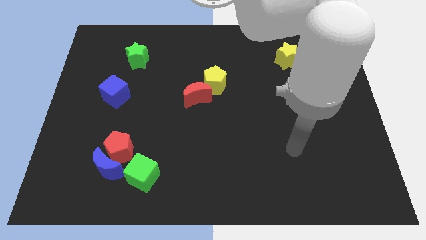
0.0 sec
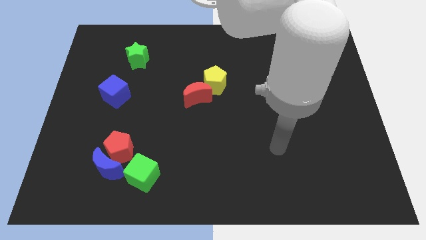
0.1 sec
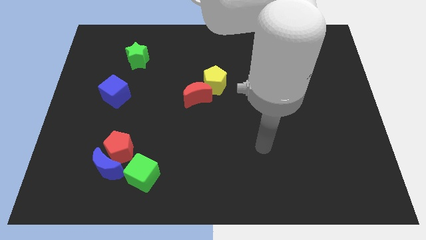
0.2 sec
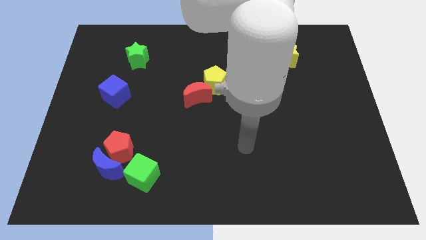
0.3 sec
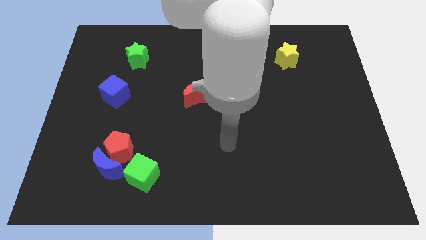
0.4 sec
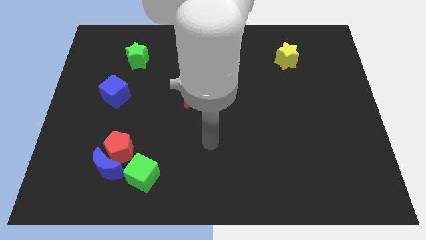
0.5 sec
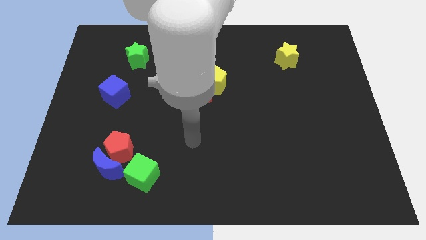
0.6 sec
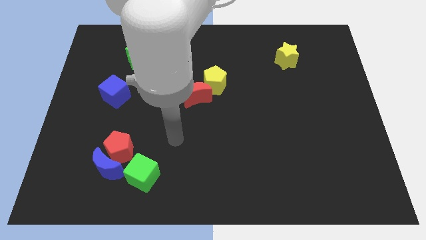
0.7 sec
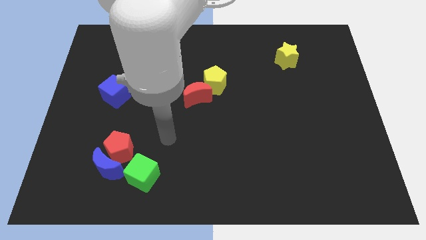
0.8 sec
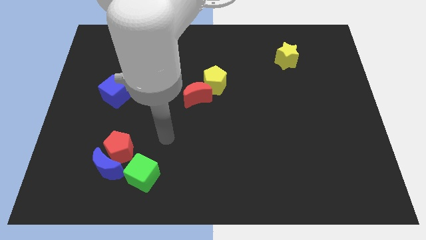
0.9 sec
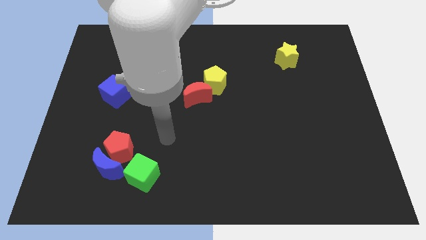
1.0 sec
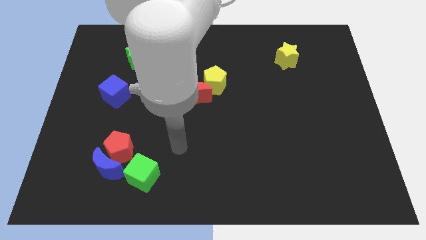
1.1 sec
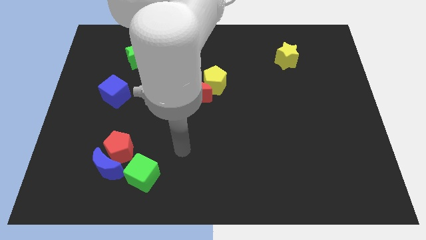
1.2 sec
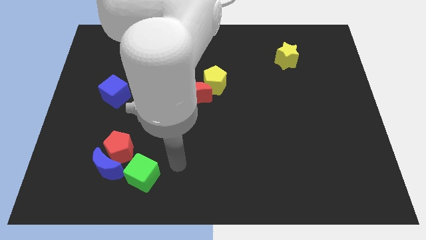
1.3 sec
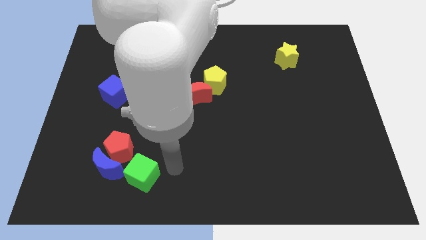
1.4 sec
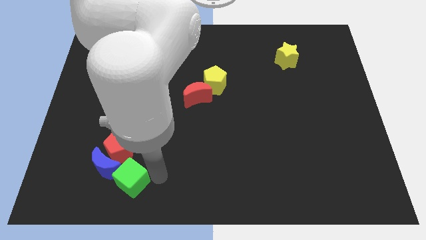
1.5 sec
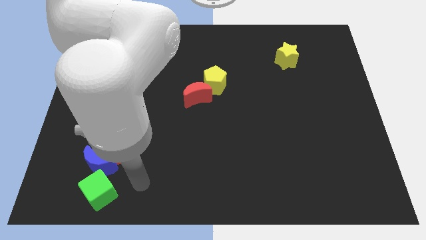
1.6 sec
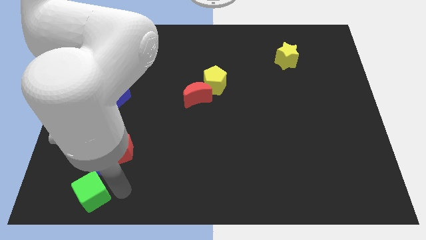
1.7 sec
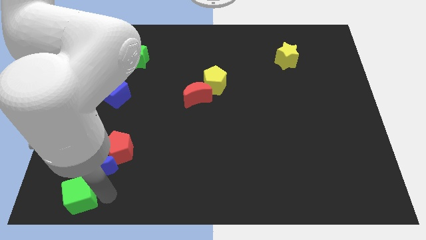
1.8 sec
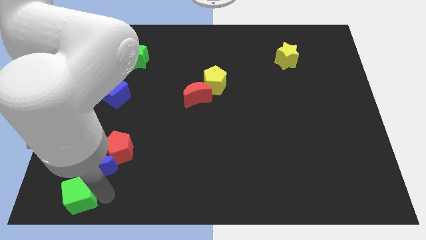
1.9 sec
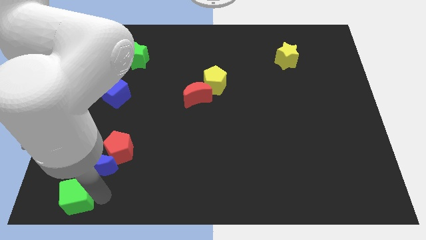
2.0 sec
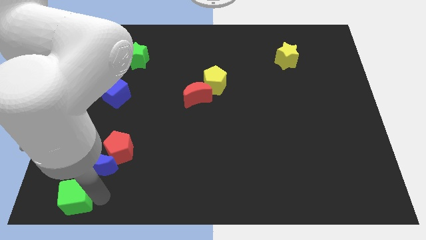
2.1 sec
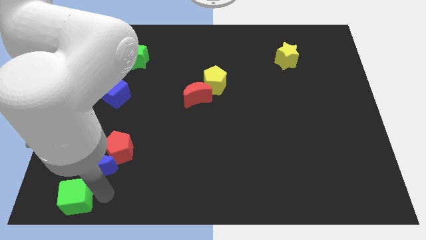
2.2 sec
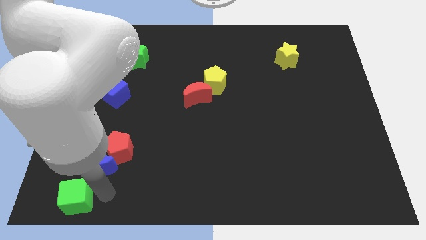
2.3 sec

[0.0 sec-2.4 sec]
move the green cube towards bottom left side of the board

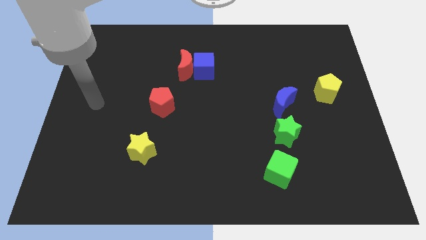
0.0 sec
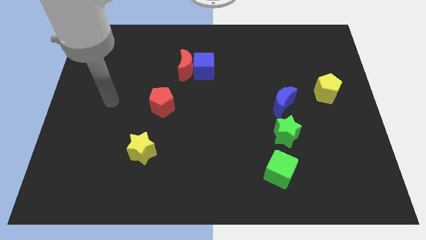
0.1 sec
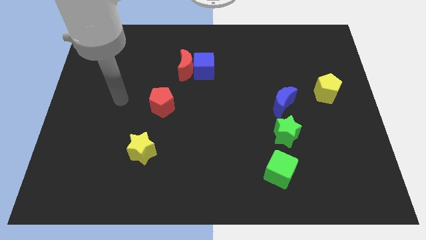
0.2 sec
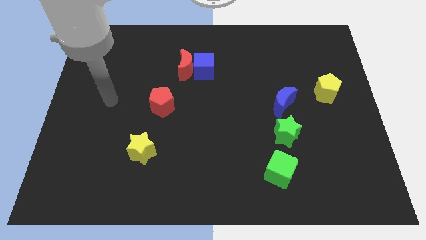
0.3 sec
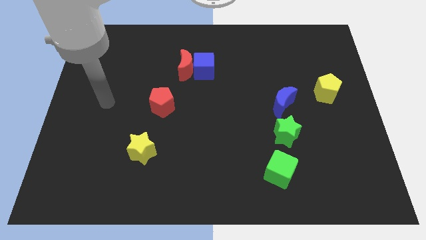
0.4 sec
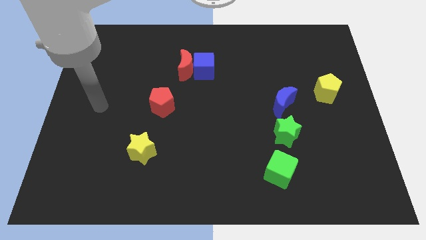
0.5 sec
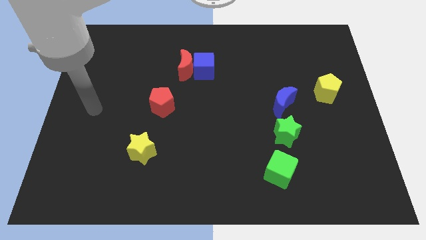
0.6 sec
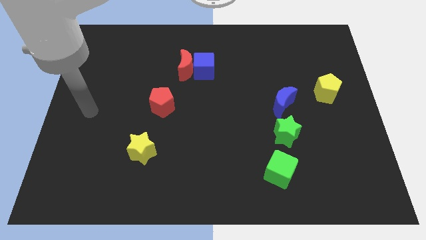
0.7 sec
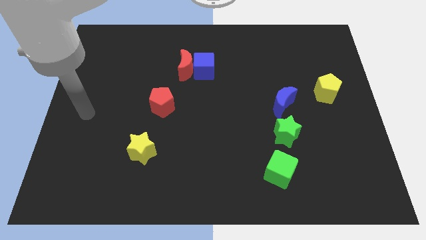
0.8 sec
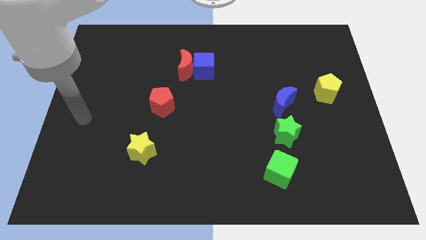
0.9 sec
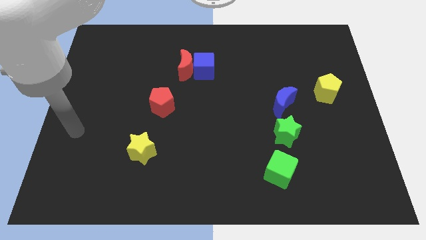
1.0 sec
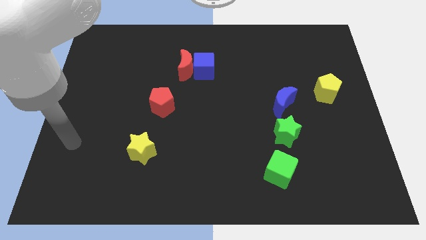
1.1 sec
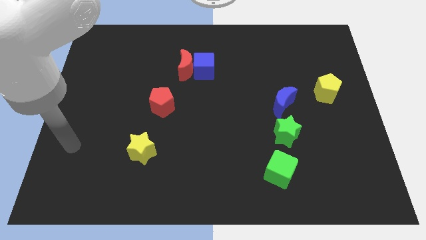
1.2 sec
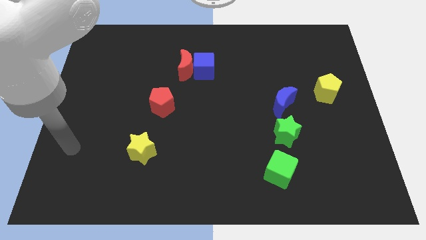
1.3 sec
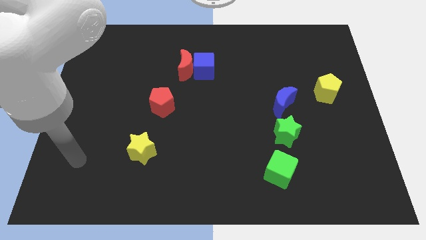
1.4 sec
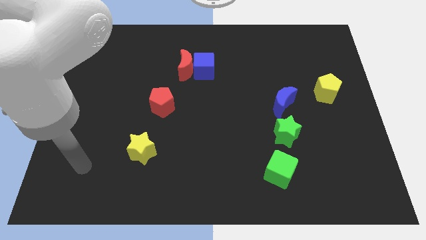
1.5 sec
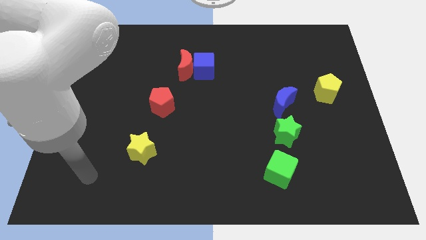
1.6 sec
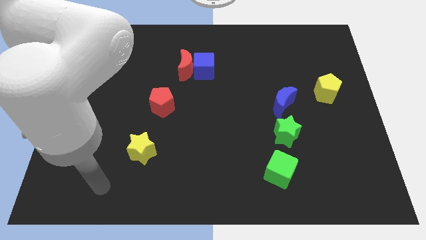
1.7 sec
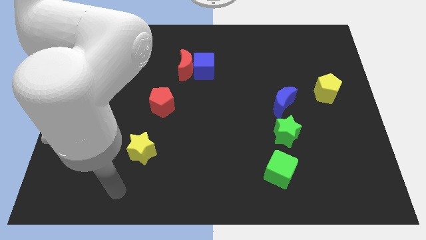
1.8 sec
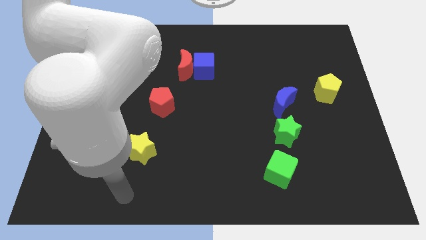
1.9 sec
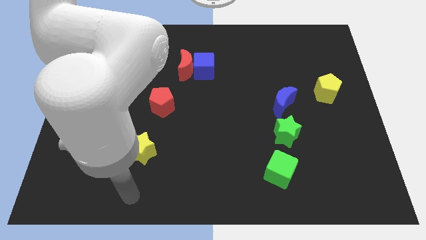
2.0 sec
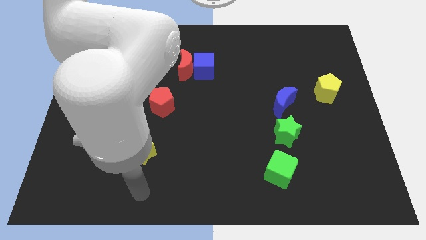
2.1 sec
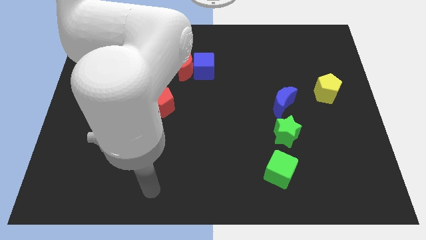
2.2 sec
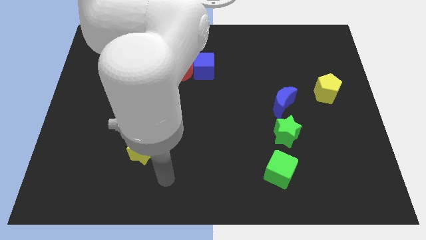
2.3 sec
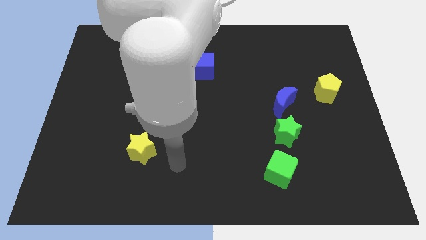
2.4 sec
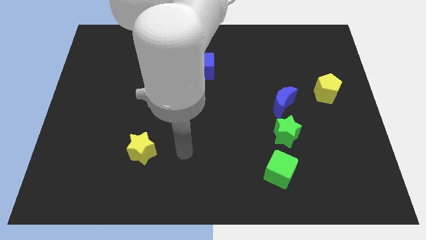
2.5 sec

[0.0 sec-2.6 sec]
move your arm to the right of the yellow star

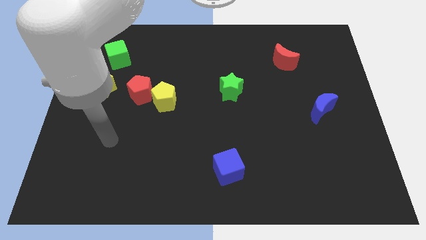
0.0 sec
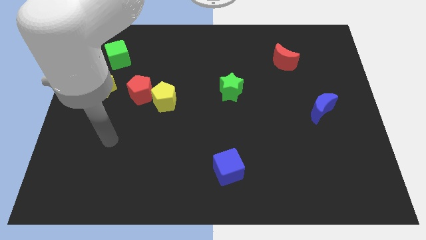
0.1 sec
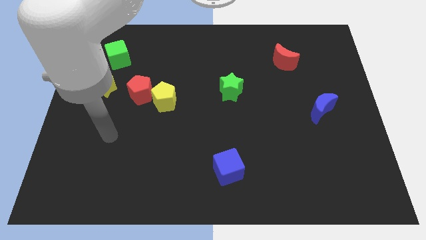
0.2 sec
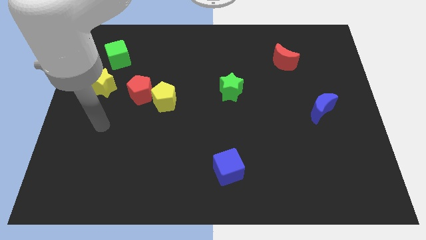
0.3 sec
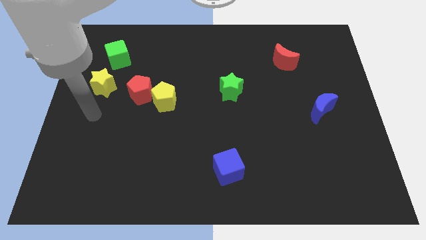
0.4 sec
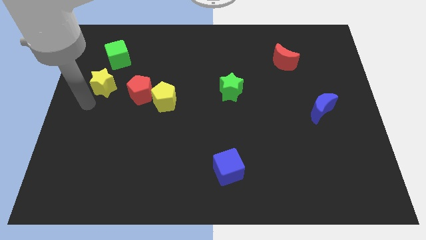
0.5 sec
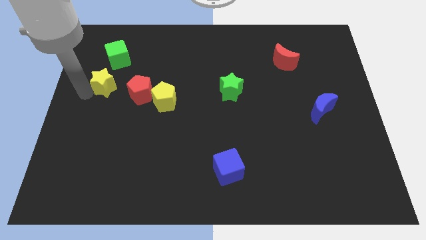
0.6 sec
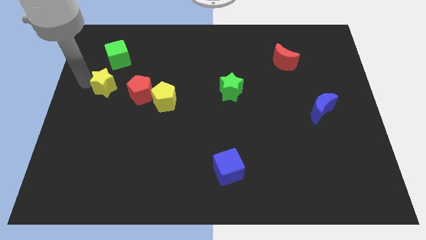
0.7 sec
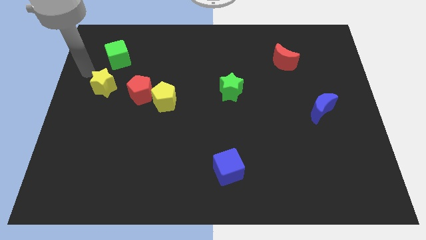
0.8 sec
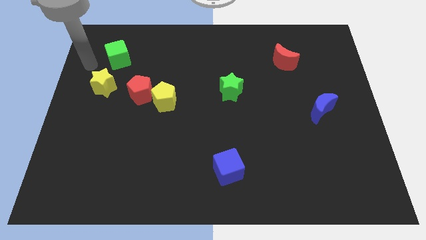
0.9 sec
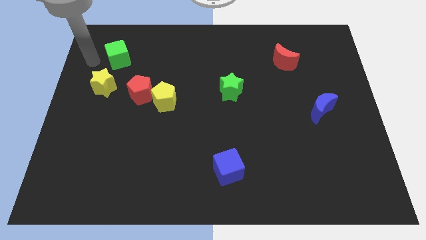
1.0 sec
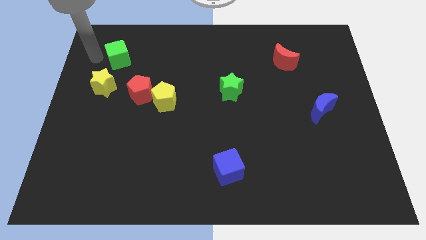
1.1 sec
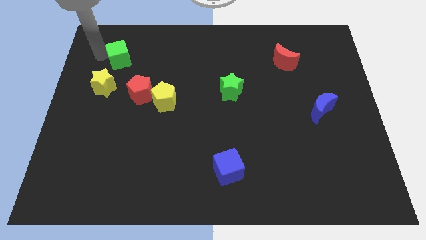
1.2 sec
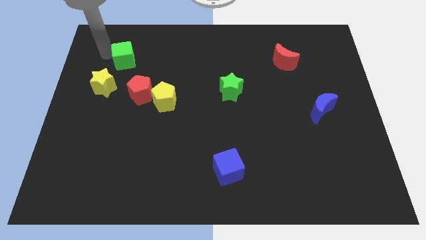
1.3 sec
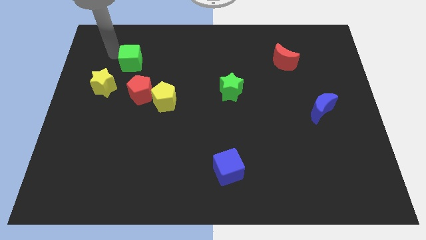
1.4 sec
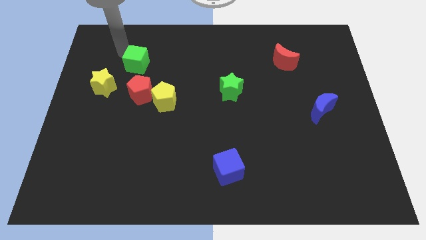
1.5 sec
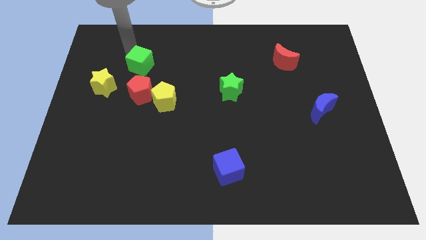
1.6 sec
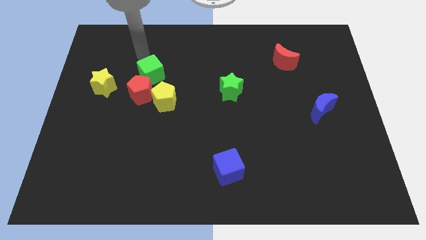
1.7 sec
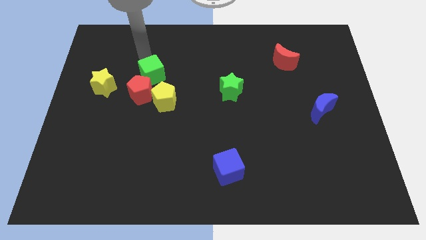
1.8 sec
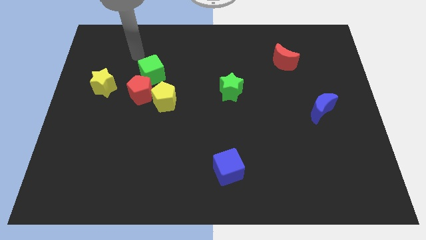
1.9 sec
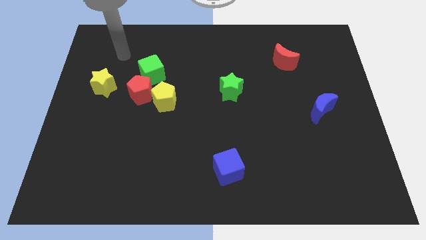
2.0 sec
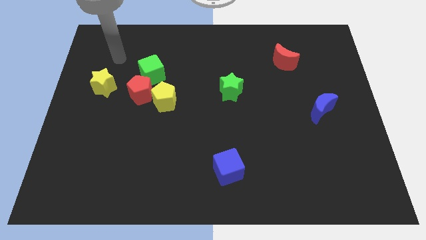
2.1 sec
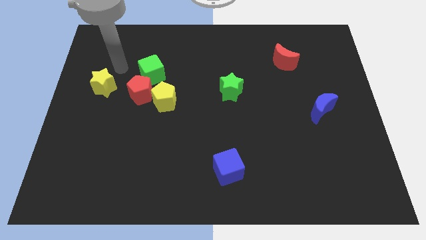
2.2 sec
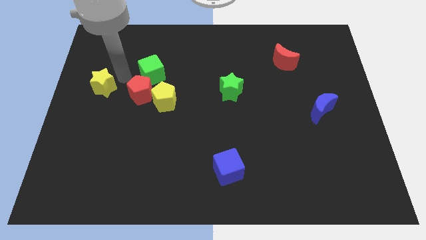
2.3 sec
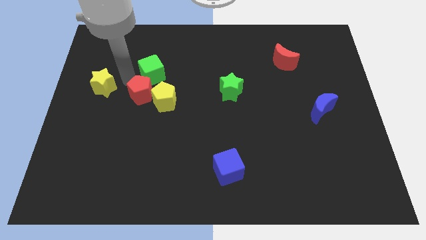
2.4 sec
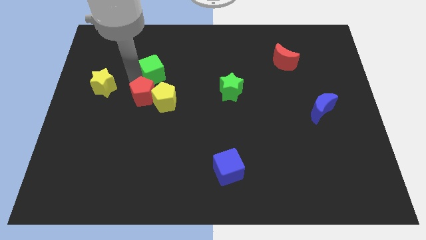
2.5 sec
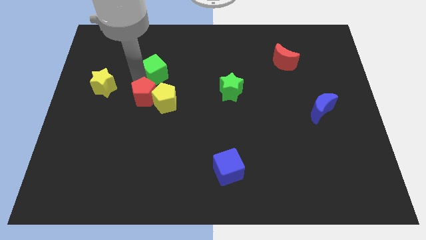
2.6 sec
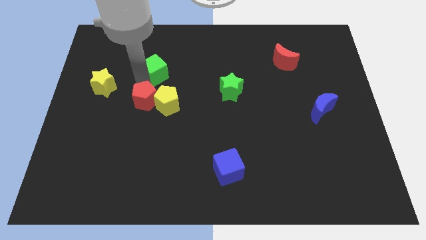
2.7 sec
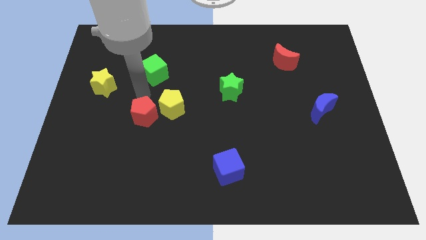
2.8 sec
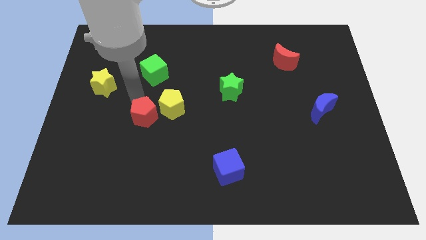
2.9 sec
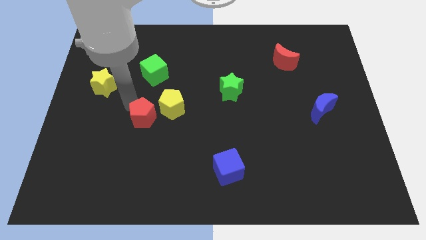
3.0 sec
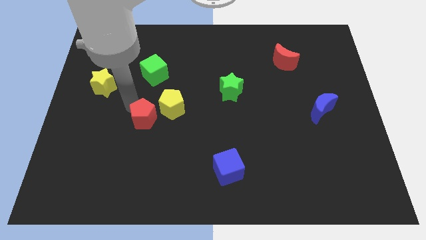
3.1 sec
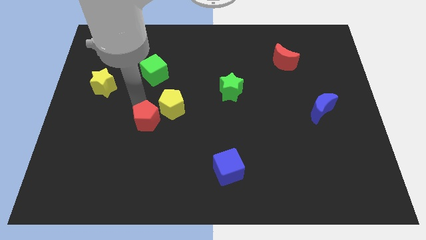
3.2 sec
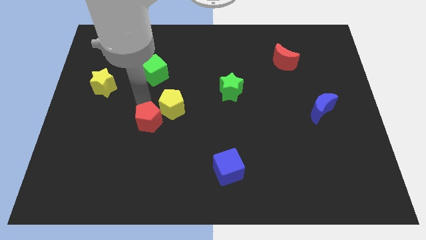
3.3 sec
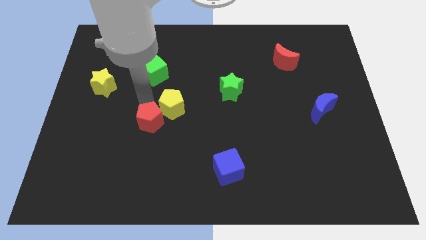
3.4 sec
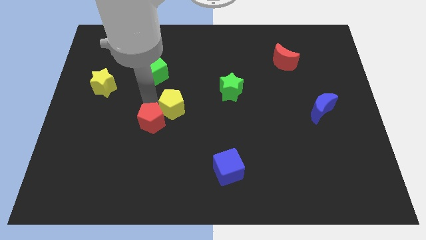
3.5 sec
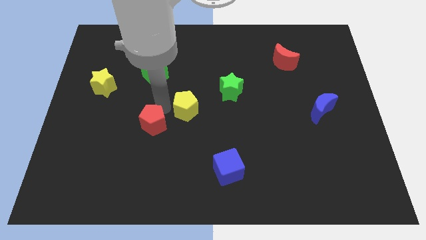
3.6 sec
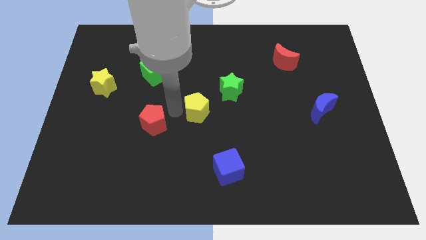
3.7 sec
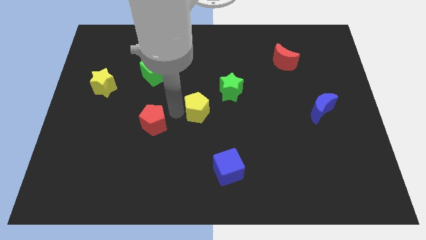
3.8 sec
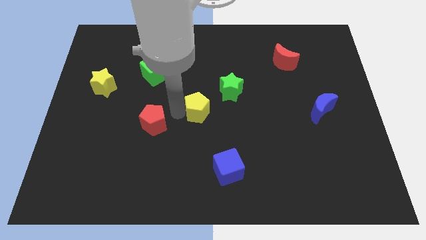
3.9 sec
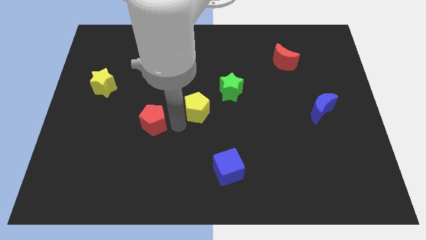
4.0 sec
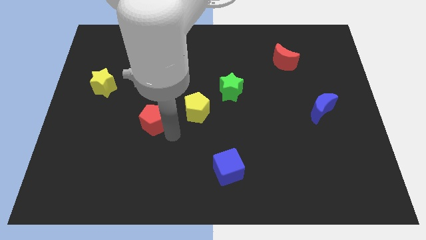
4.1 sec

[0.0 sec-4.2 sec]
make a triangle with green cubered pentagonyellow pentagon
